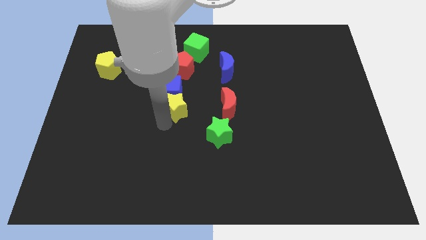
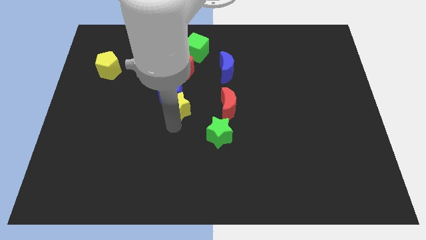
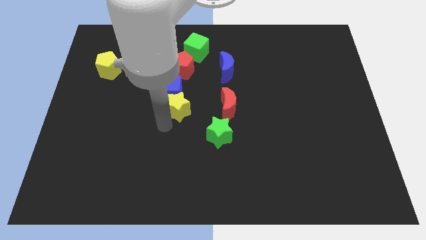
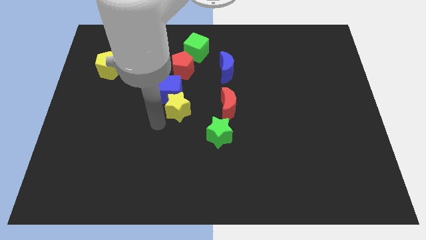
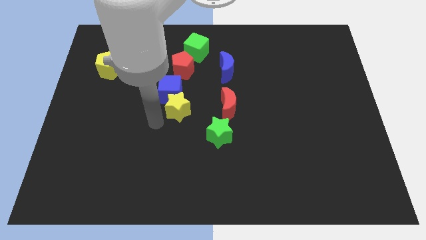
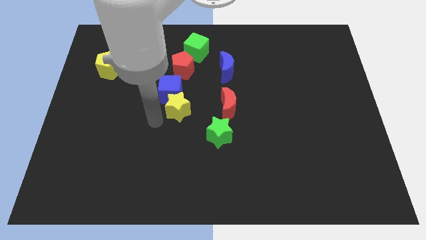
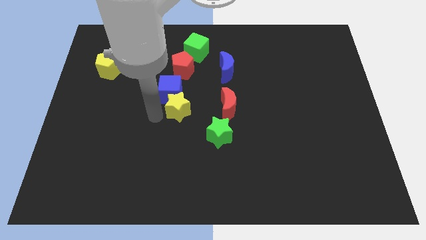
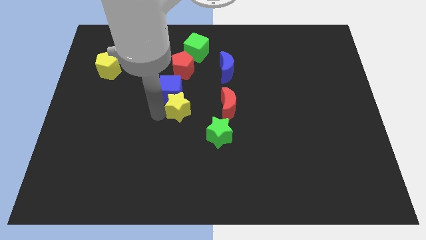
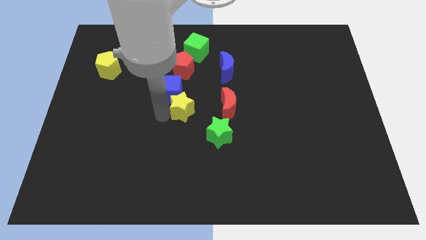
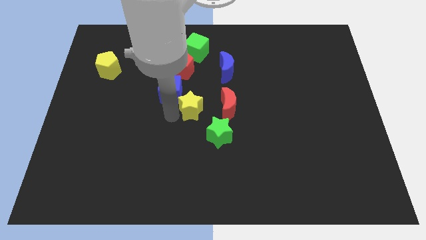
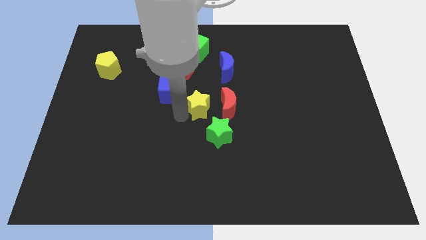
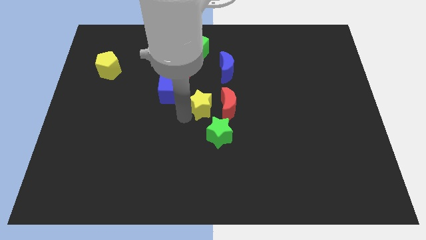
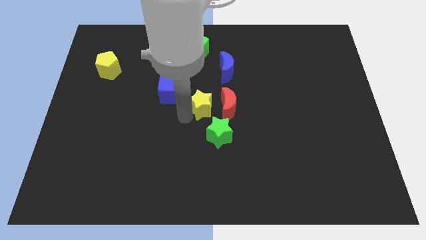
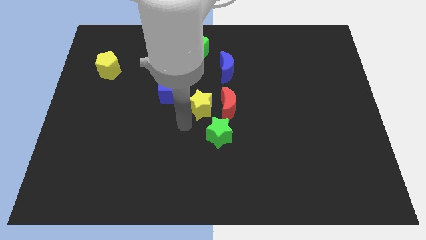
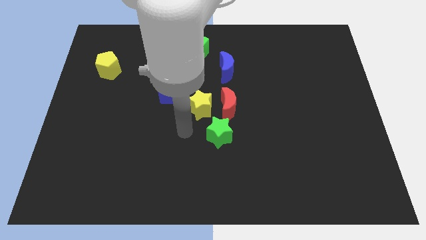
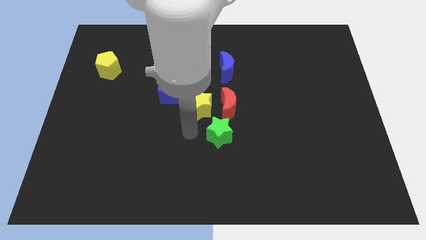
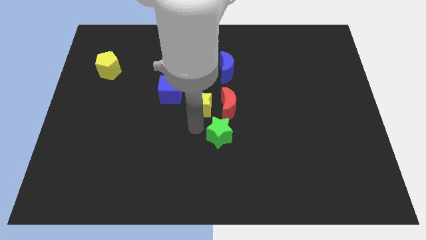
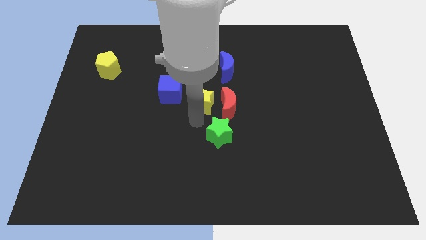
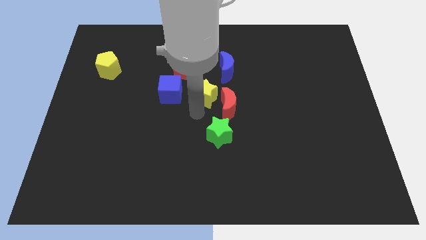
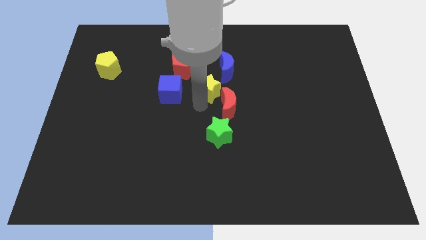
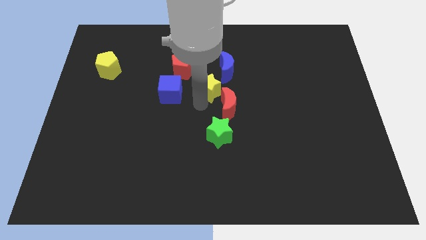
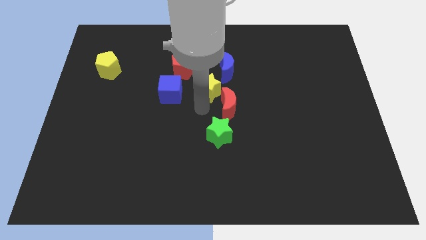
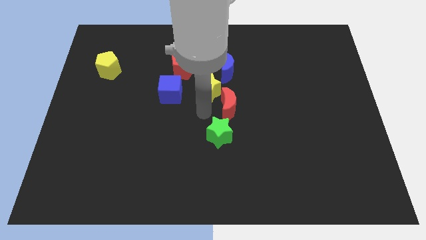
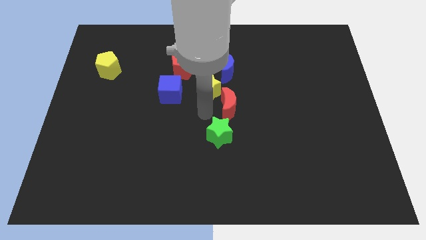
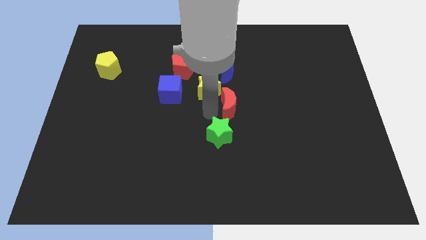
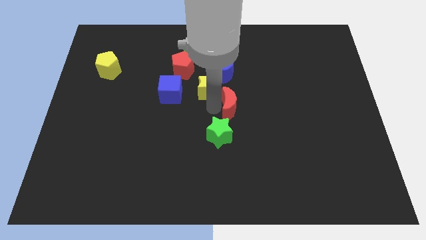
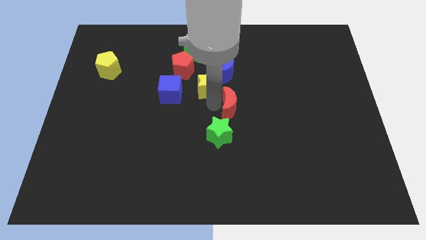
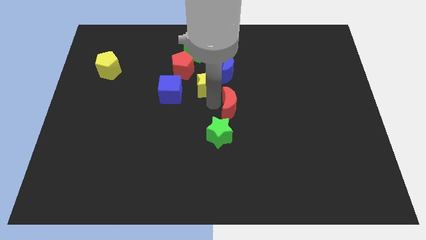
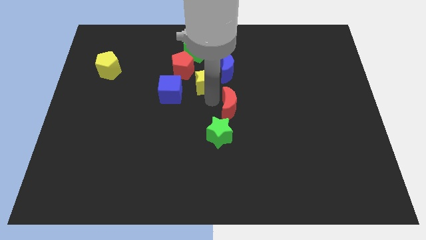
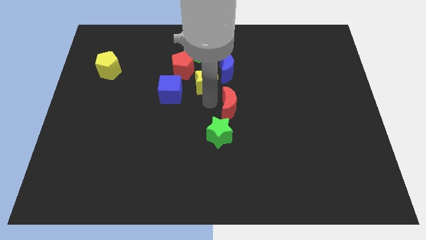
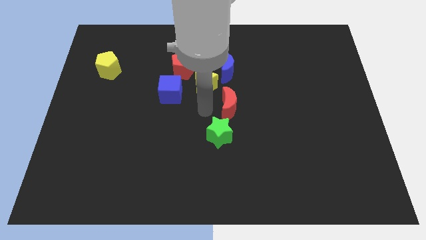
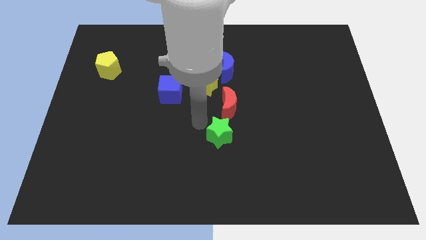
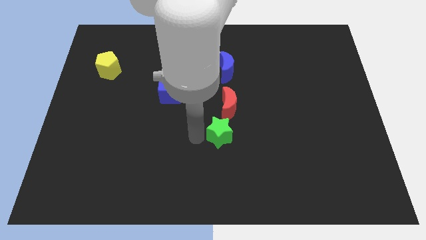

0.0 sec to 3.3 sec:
move the yellow star to the center of the board

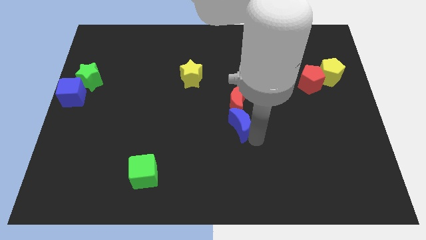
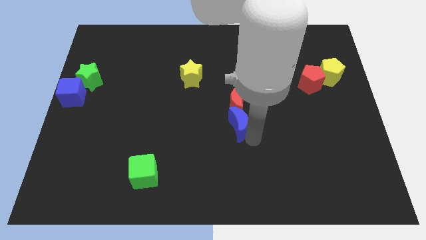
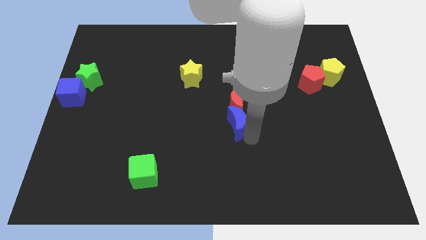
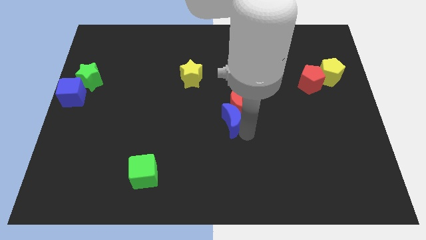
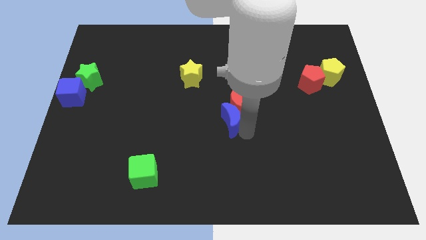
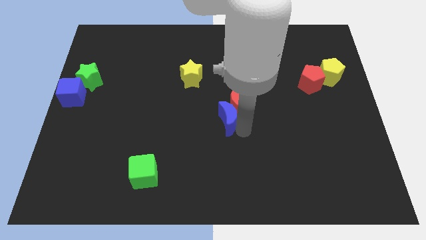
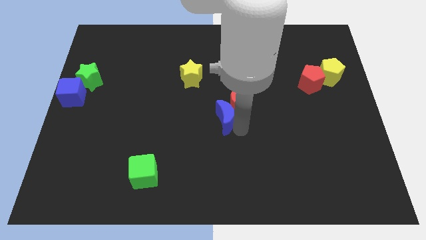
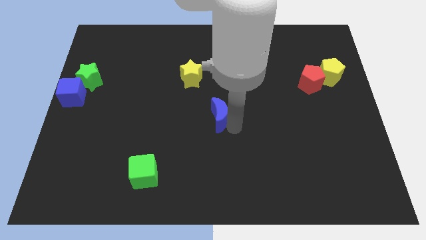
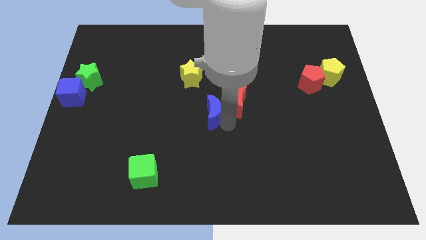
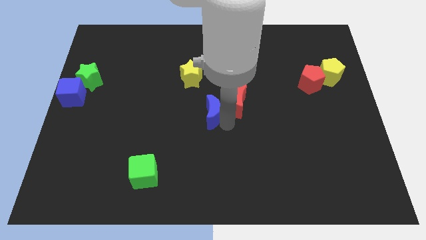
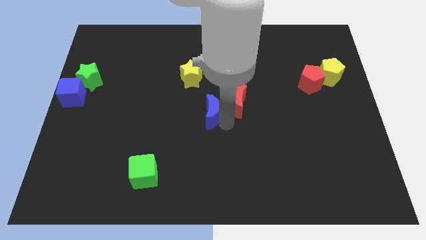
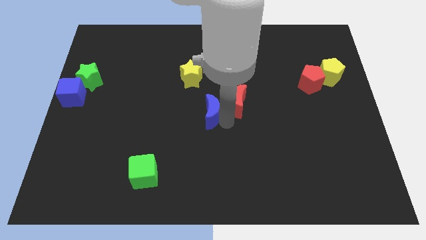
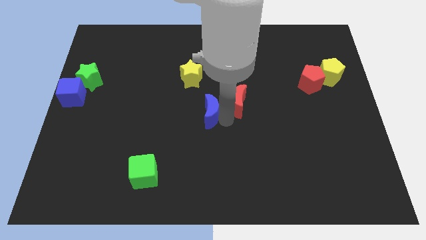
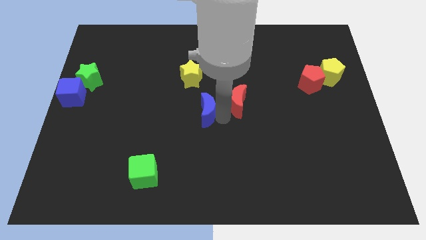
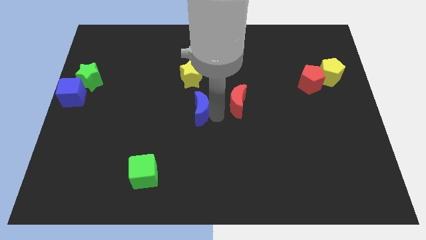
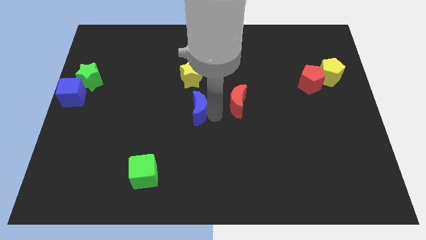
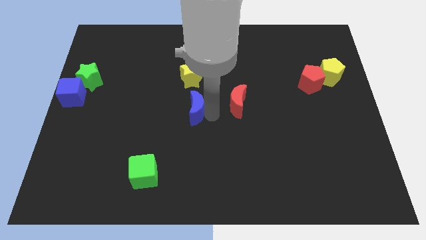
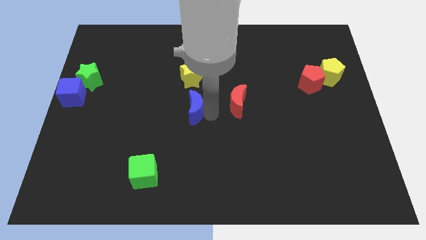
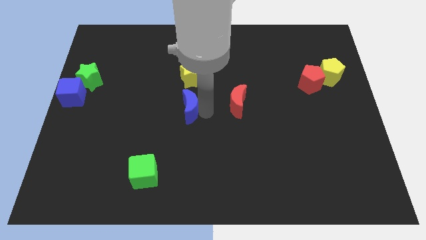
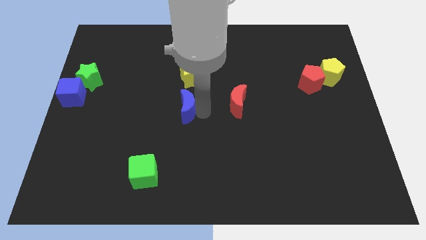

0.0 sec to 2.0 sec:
push the blue moon to the bottom side of the yellow star

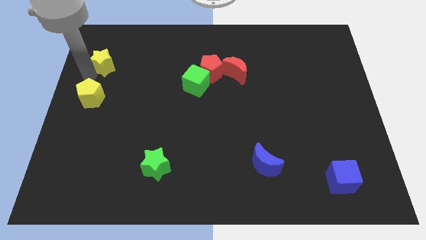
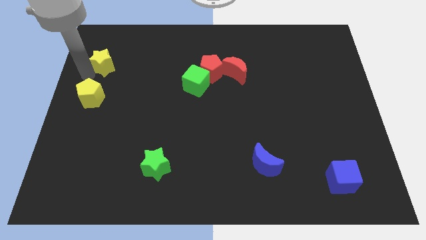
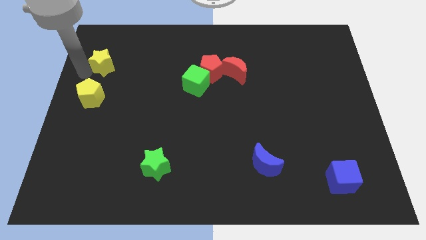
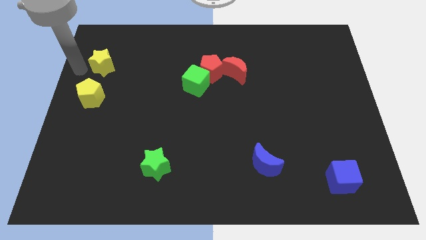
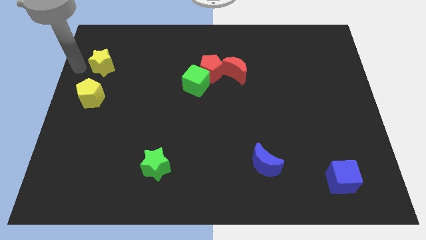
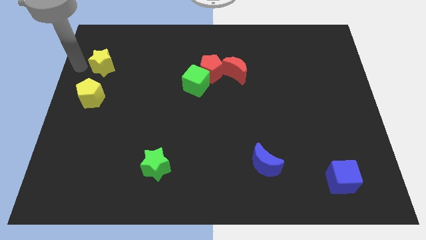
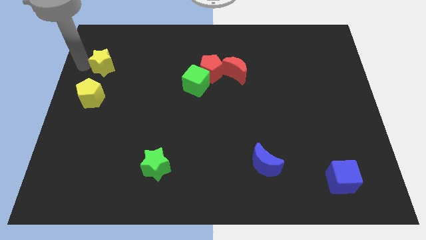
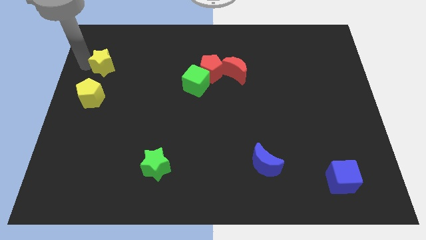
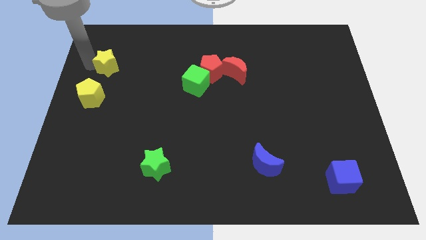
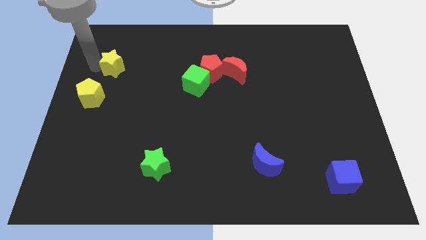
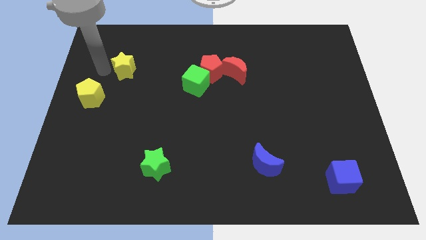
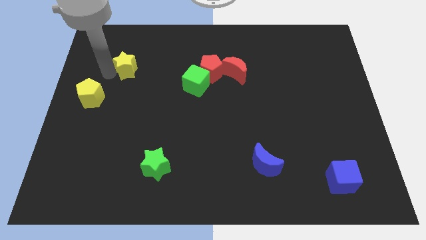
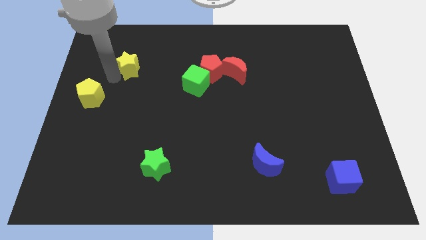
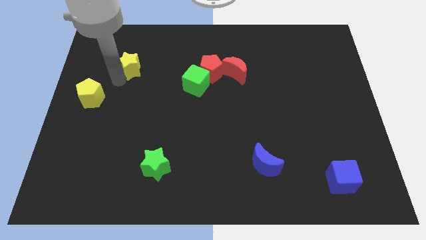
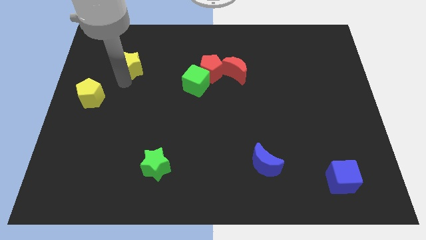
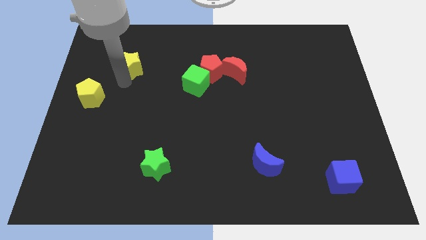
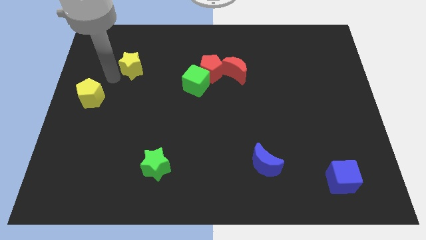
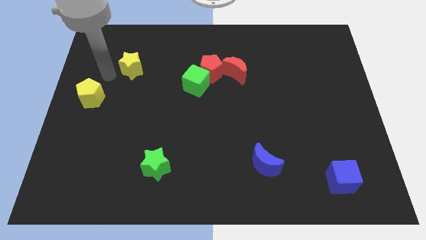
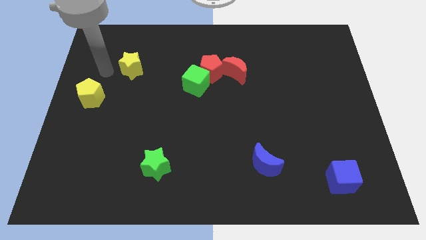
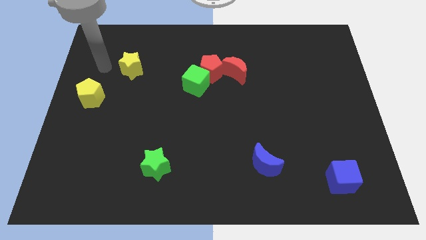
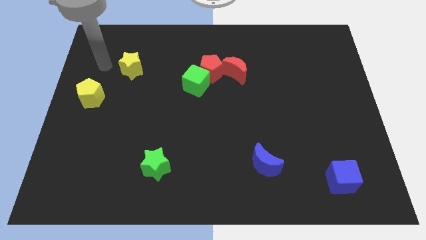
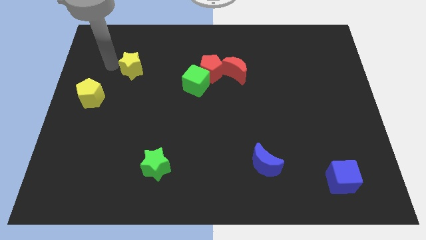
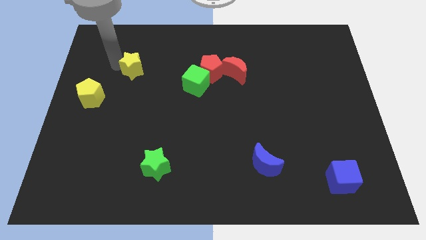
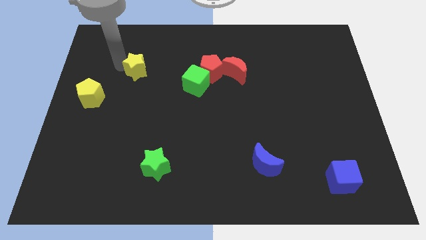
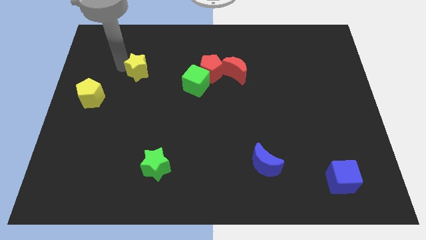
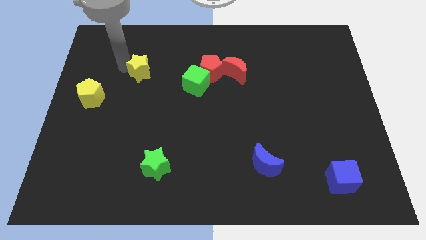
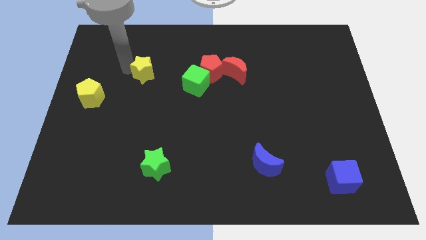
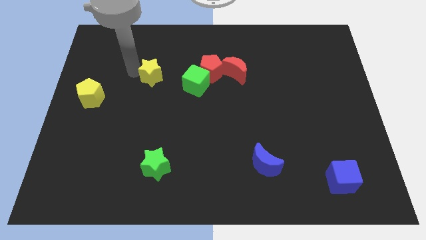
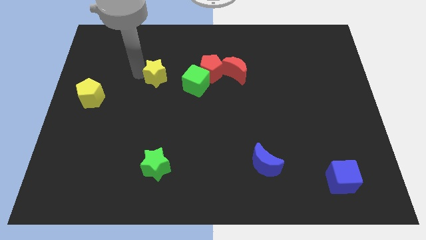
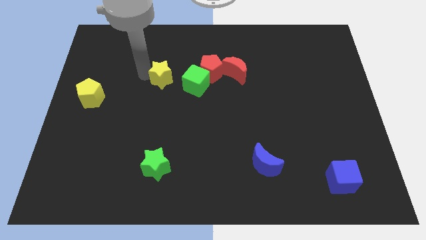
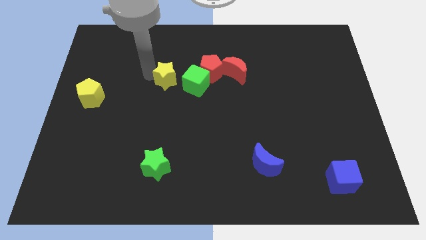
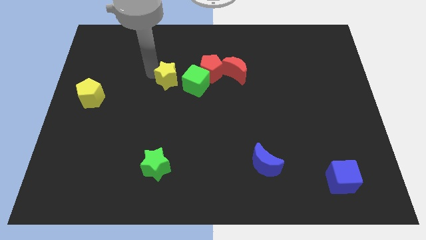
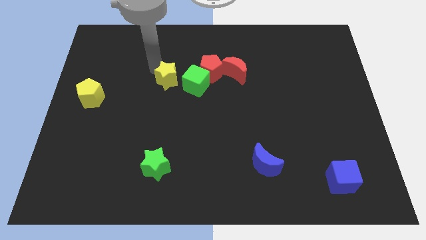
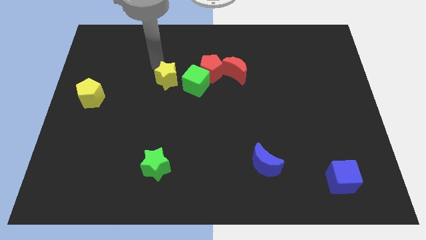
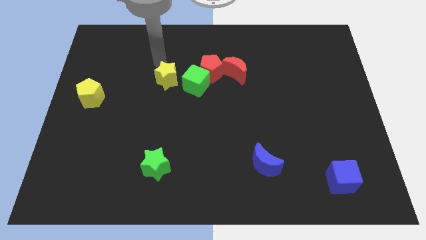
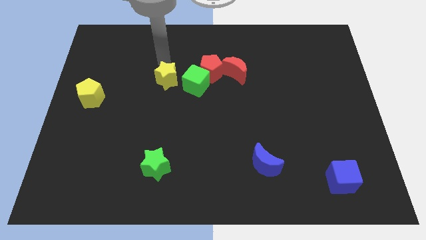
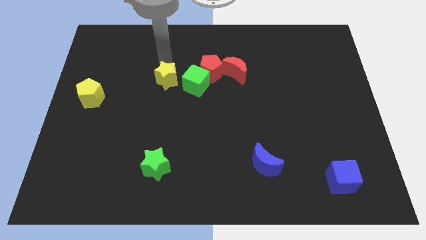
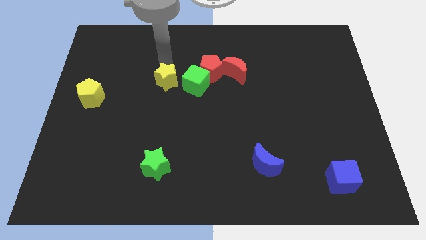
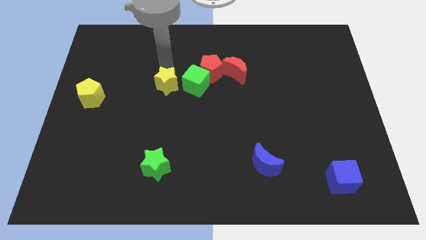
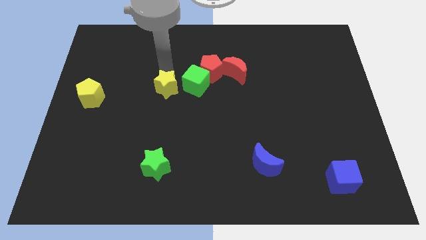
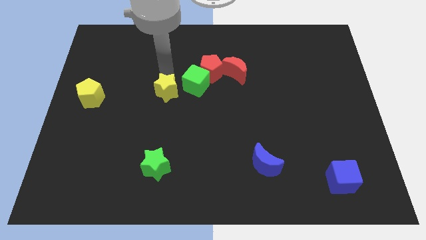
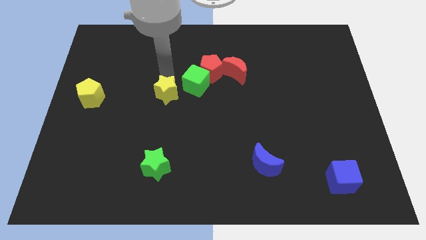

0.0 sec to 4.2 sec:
move the yellow star to the left of the green cube
